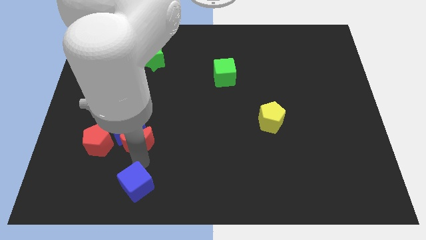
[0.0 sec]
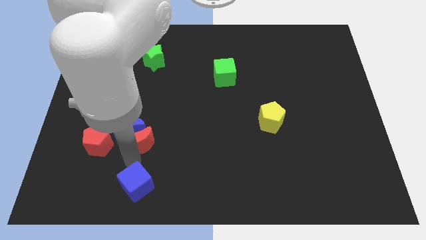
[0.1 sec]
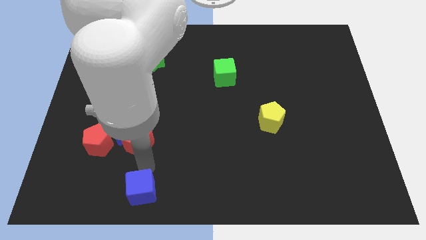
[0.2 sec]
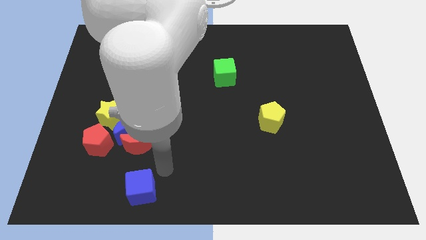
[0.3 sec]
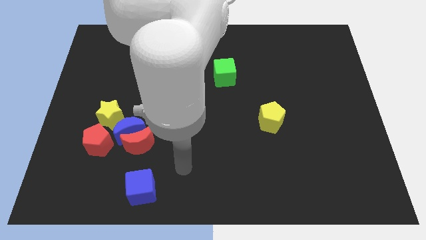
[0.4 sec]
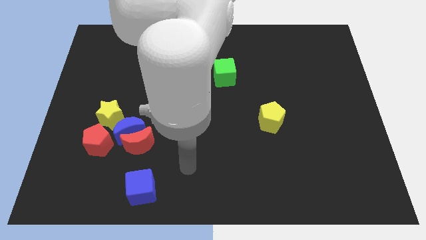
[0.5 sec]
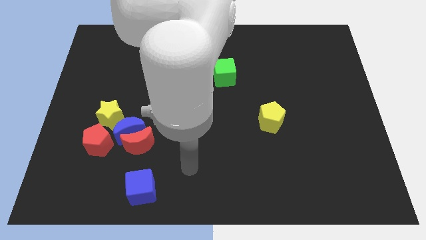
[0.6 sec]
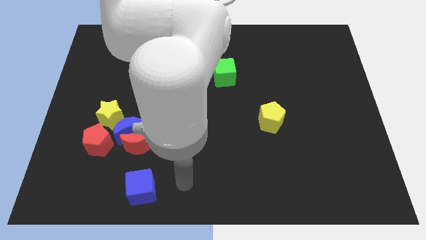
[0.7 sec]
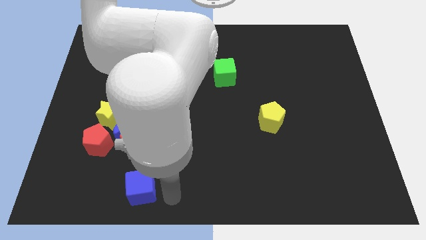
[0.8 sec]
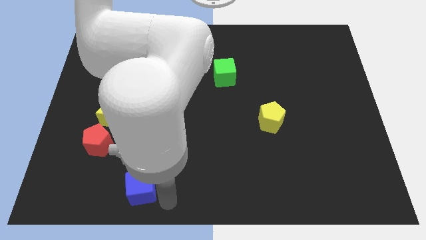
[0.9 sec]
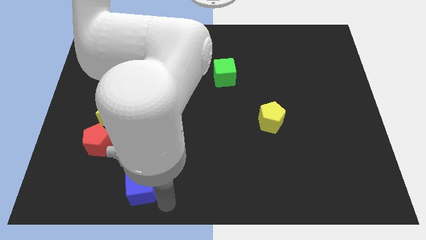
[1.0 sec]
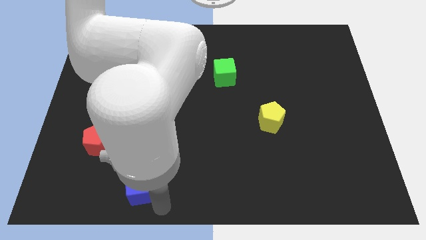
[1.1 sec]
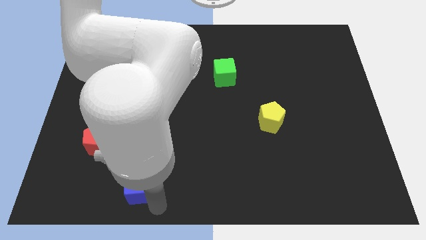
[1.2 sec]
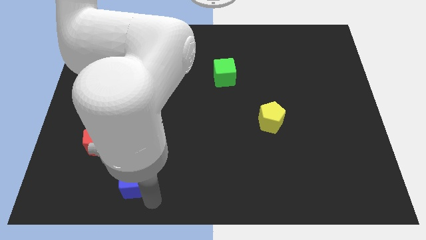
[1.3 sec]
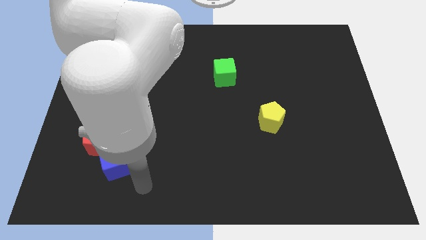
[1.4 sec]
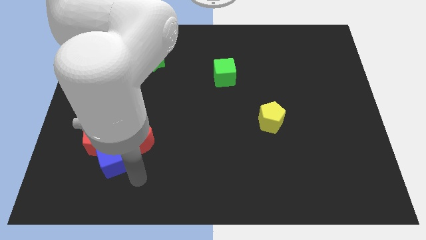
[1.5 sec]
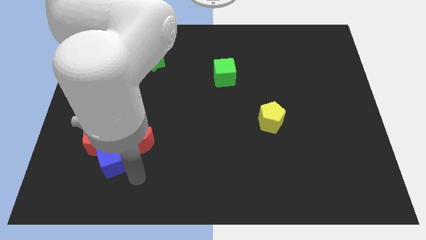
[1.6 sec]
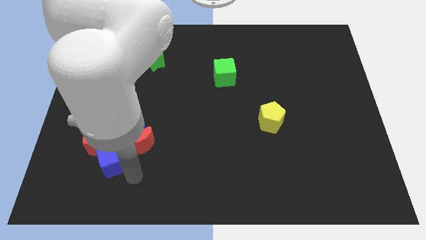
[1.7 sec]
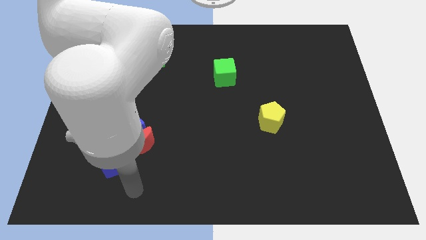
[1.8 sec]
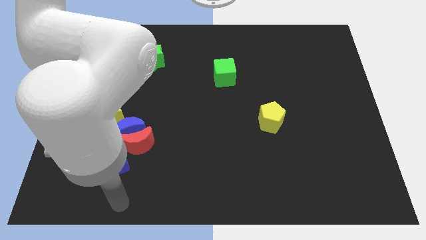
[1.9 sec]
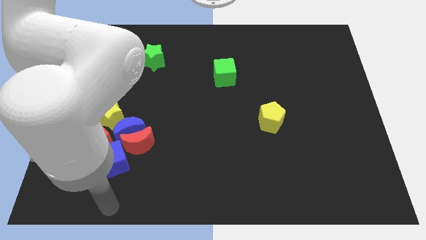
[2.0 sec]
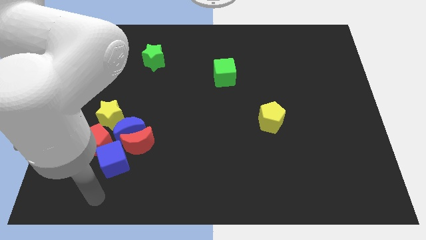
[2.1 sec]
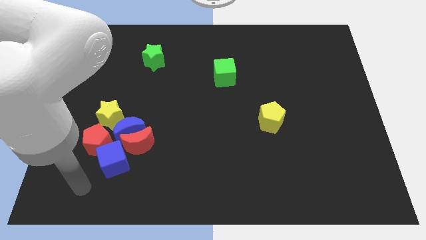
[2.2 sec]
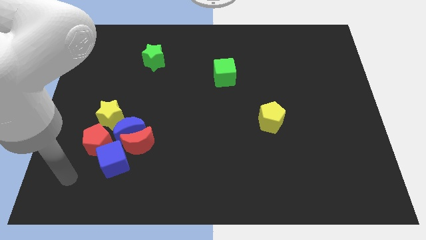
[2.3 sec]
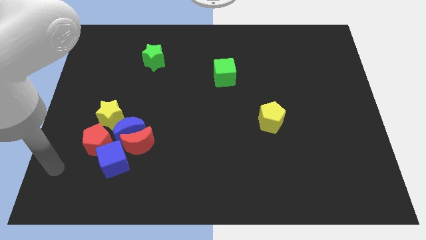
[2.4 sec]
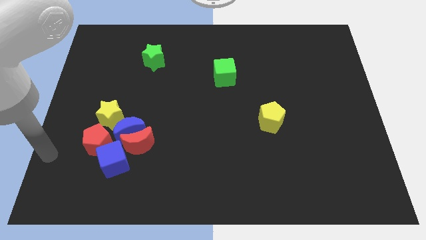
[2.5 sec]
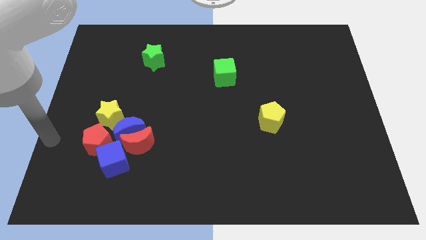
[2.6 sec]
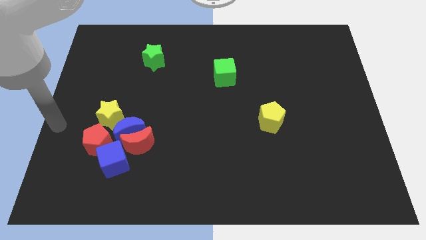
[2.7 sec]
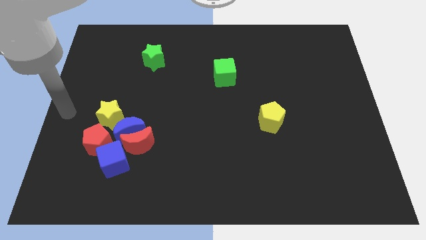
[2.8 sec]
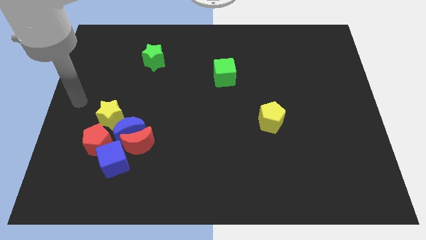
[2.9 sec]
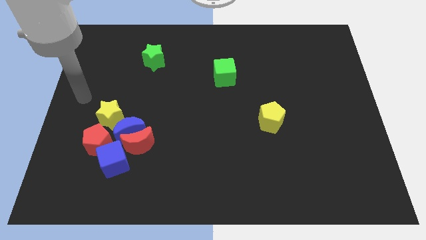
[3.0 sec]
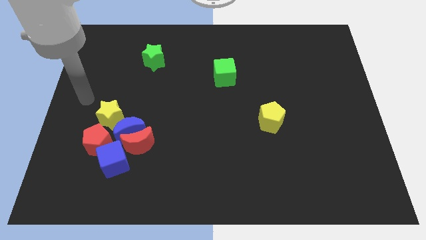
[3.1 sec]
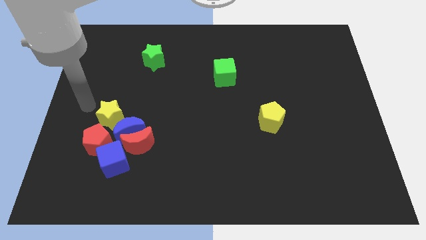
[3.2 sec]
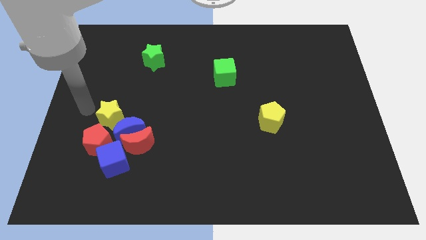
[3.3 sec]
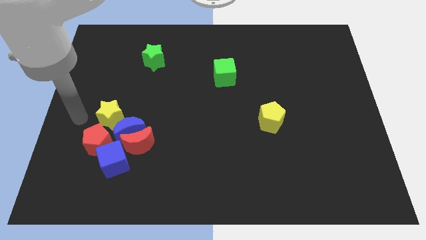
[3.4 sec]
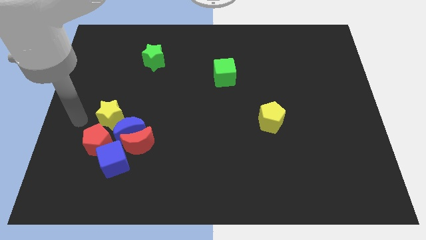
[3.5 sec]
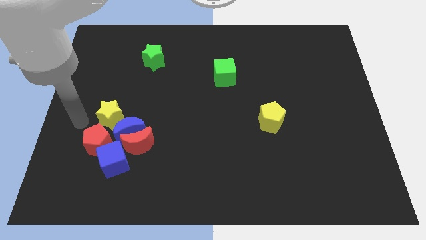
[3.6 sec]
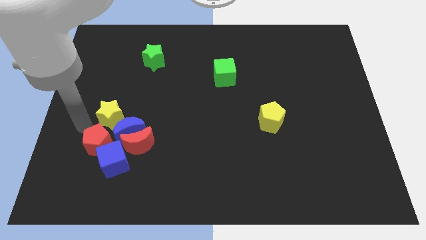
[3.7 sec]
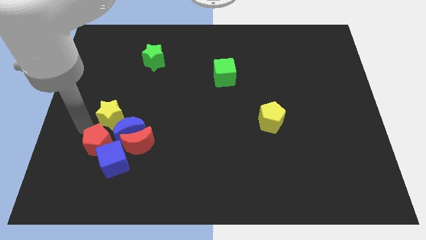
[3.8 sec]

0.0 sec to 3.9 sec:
move blue cube into the group of the blocks

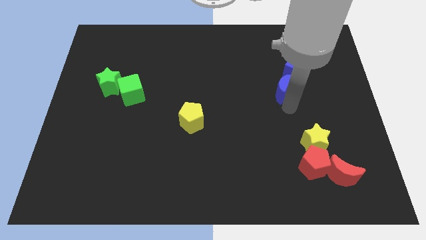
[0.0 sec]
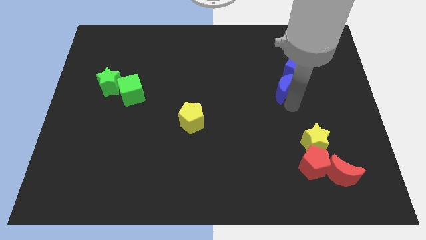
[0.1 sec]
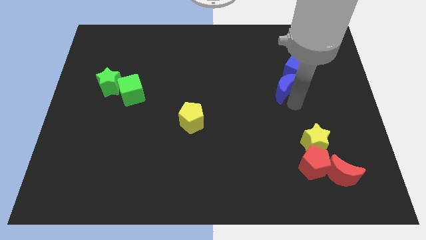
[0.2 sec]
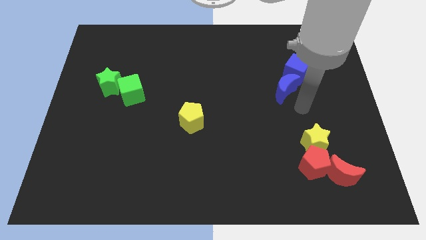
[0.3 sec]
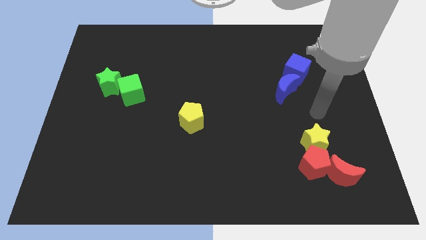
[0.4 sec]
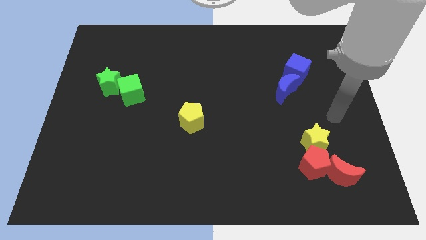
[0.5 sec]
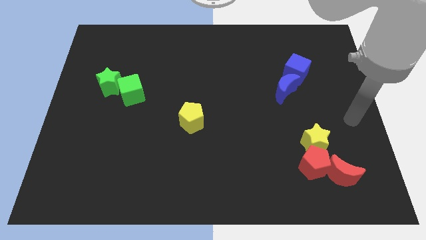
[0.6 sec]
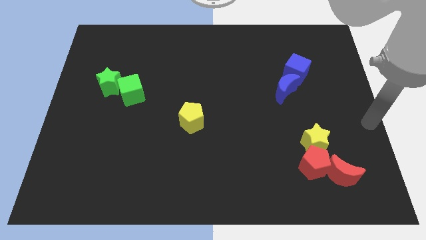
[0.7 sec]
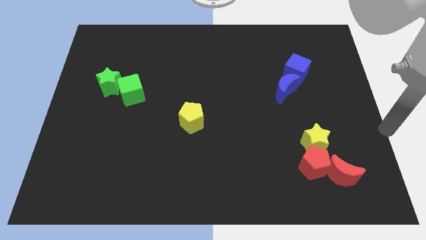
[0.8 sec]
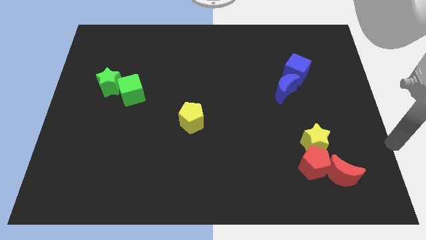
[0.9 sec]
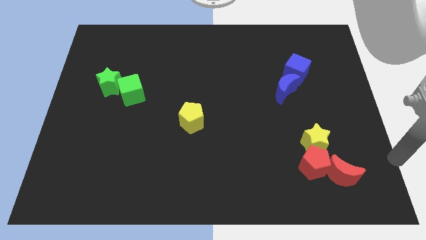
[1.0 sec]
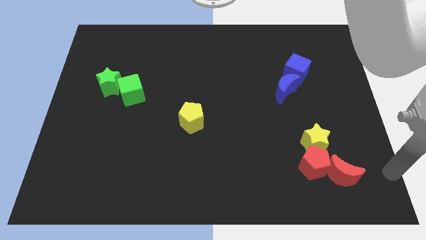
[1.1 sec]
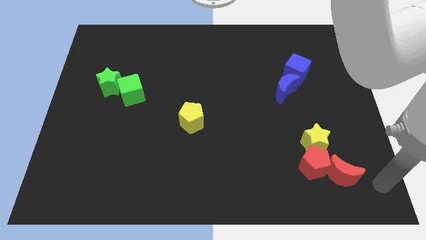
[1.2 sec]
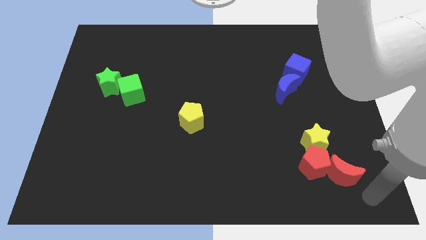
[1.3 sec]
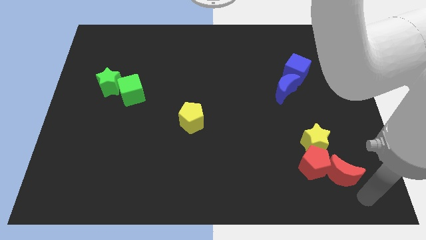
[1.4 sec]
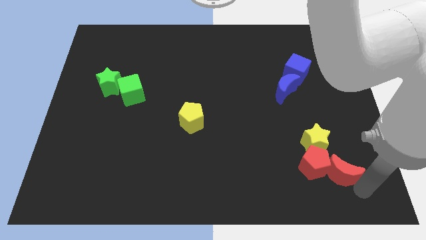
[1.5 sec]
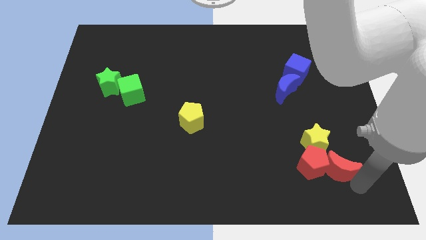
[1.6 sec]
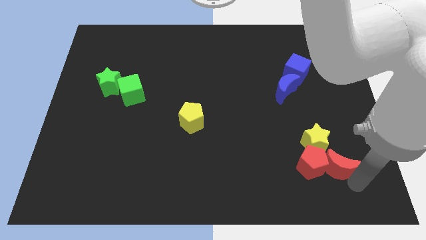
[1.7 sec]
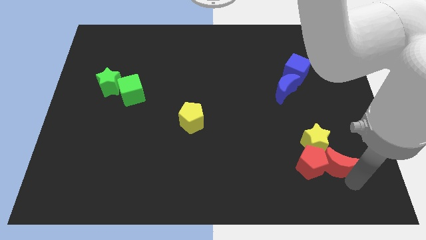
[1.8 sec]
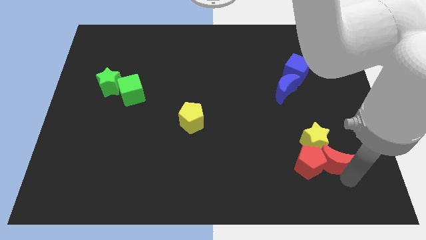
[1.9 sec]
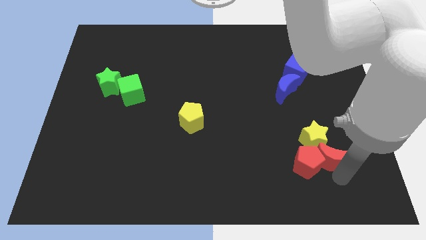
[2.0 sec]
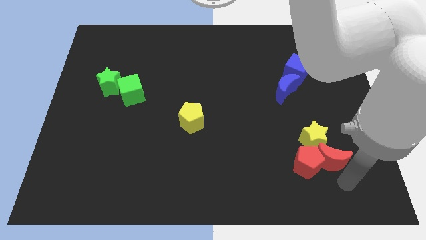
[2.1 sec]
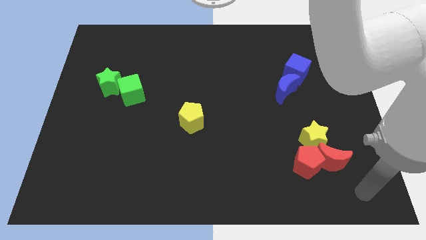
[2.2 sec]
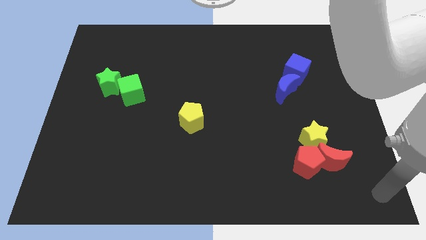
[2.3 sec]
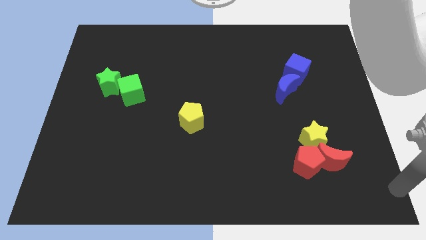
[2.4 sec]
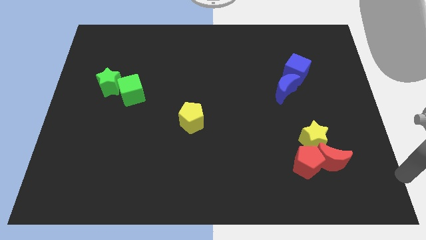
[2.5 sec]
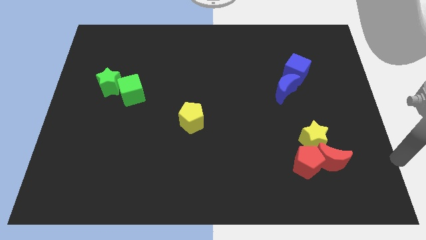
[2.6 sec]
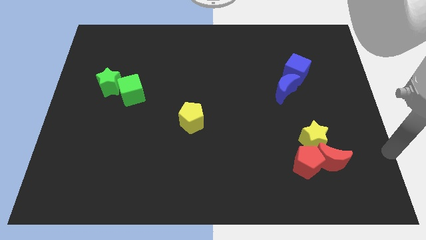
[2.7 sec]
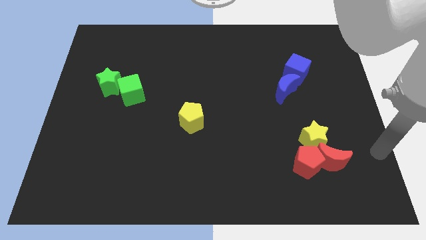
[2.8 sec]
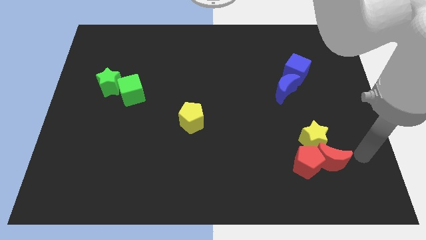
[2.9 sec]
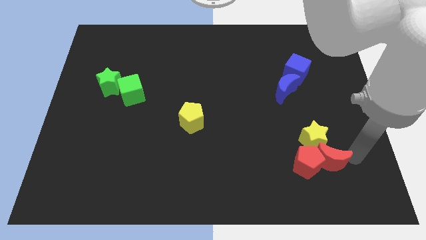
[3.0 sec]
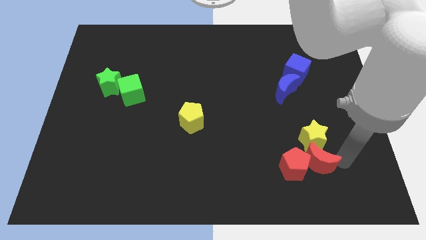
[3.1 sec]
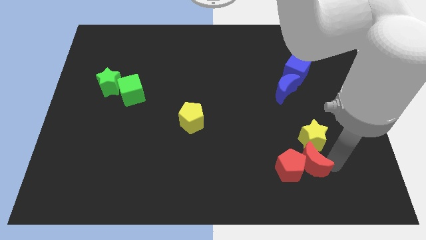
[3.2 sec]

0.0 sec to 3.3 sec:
place red moon to the bottom of yellow star

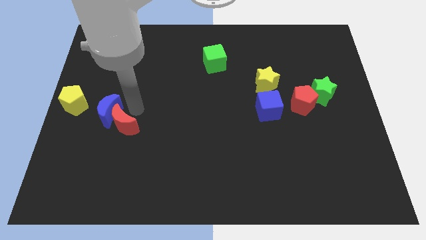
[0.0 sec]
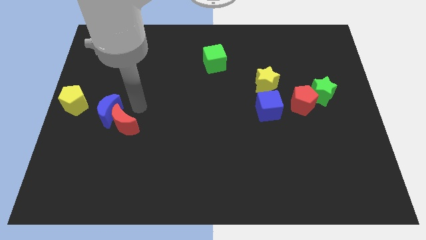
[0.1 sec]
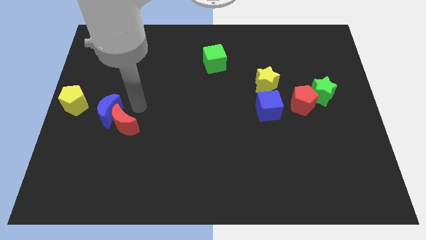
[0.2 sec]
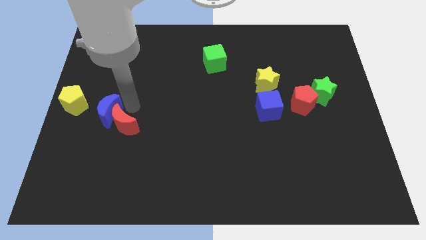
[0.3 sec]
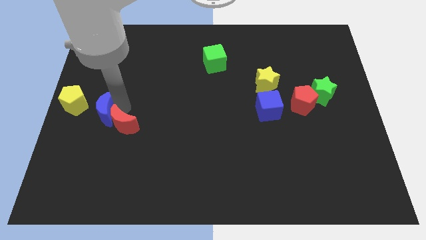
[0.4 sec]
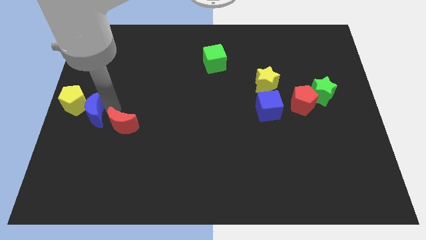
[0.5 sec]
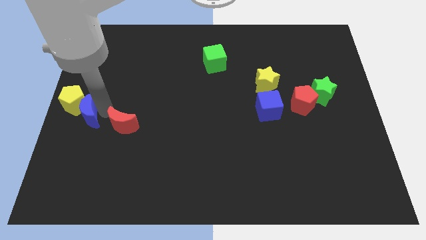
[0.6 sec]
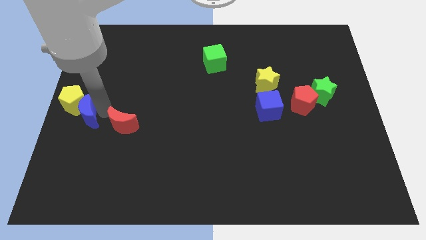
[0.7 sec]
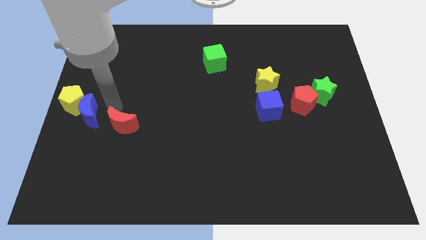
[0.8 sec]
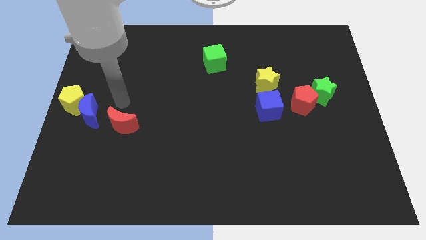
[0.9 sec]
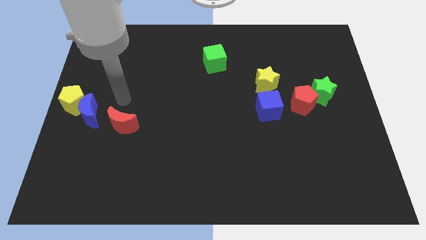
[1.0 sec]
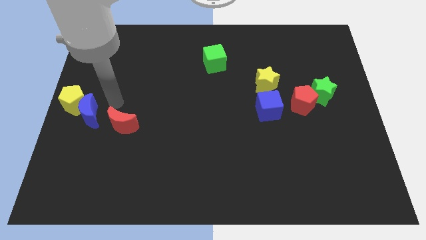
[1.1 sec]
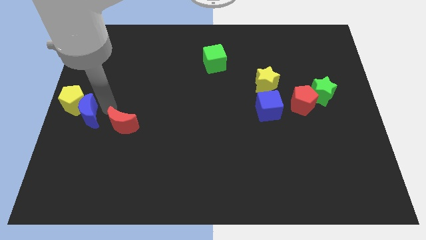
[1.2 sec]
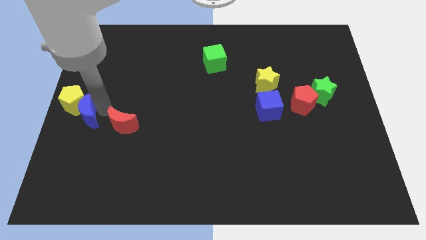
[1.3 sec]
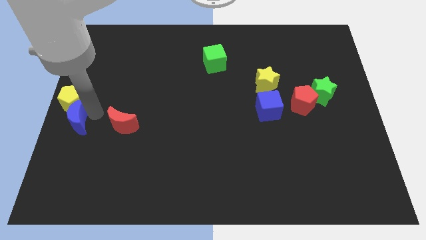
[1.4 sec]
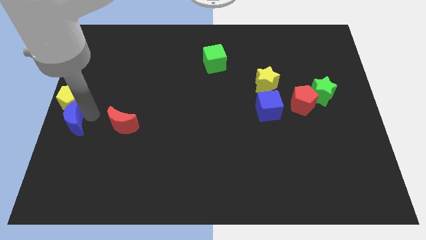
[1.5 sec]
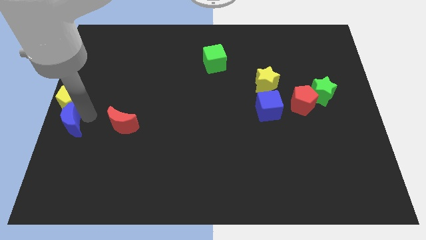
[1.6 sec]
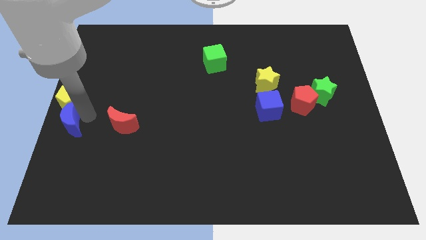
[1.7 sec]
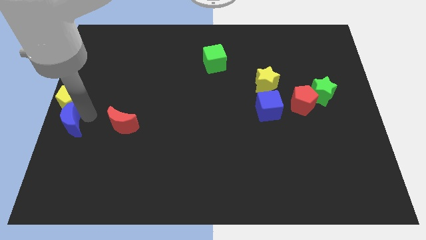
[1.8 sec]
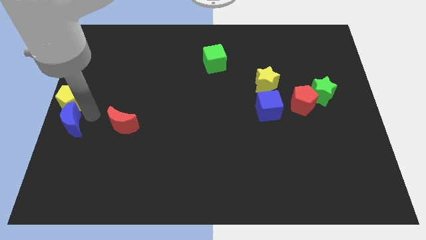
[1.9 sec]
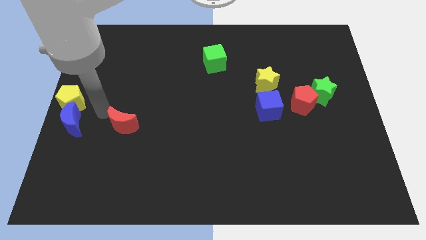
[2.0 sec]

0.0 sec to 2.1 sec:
place the blue crescent to the bottom of yellow pentagon
